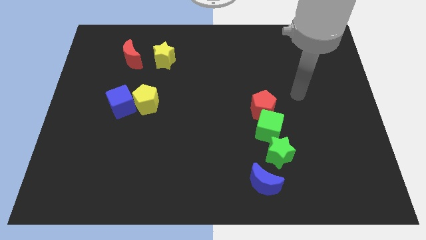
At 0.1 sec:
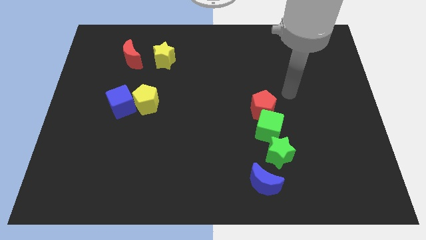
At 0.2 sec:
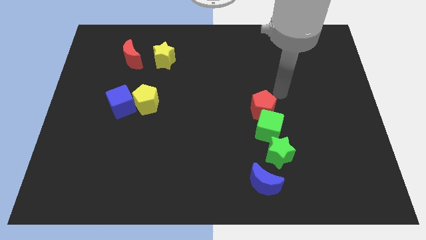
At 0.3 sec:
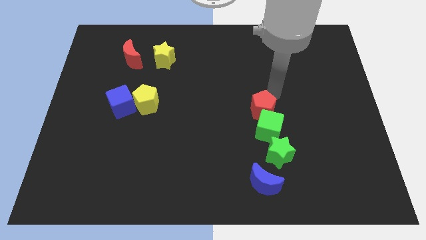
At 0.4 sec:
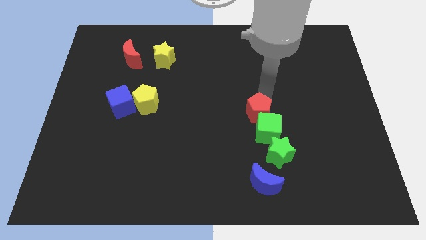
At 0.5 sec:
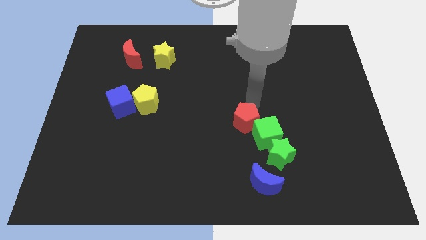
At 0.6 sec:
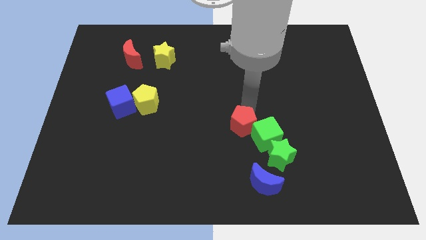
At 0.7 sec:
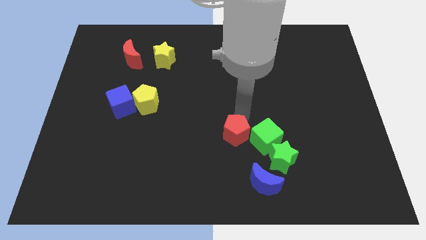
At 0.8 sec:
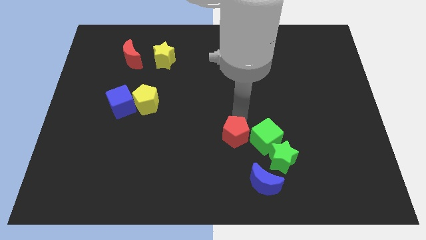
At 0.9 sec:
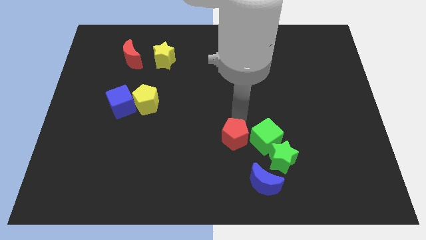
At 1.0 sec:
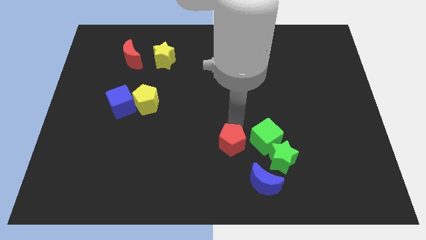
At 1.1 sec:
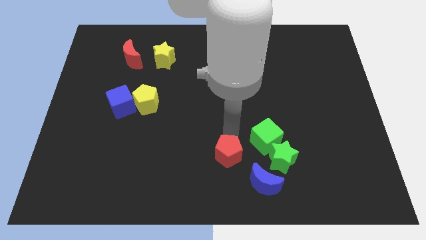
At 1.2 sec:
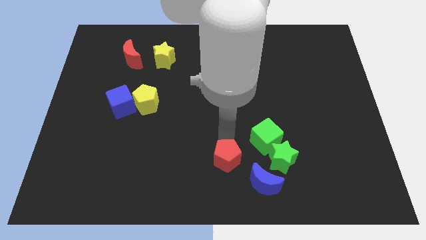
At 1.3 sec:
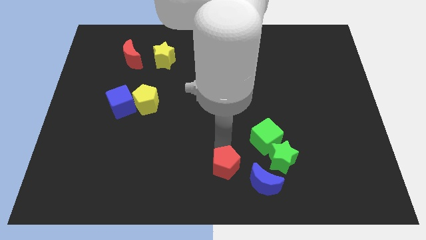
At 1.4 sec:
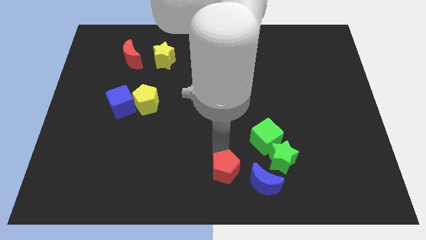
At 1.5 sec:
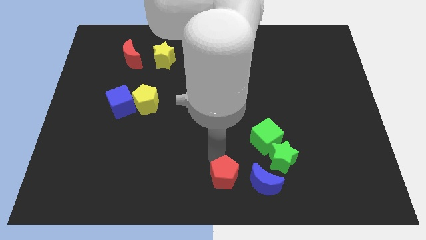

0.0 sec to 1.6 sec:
move the red pentagon left to the blue moon

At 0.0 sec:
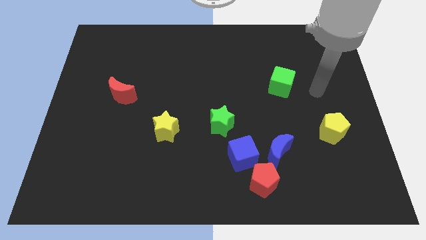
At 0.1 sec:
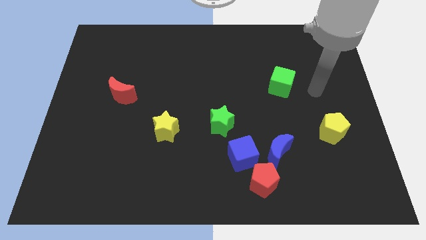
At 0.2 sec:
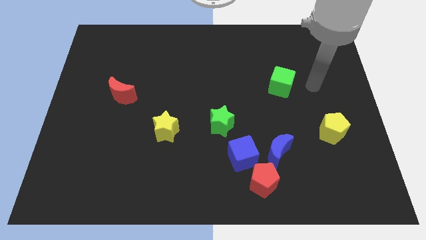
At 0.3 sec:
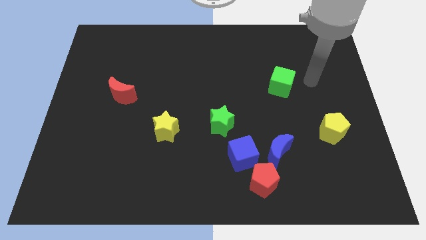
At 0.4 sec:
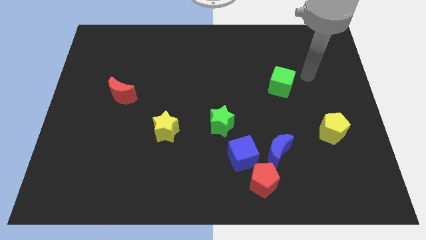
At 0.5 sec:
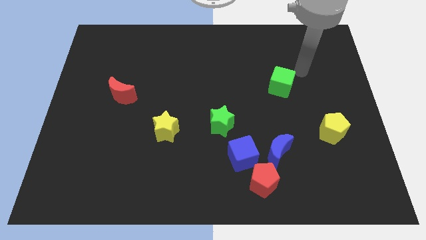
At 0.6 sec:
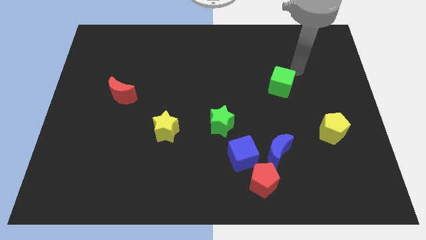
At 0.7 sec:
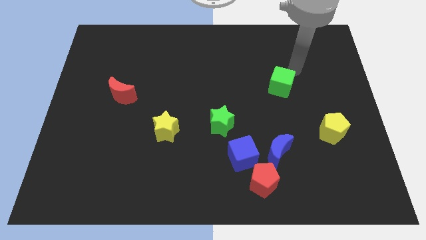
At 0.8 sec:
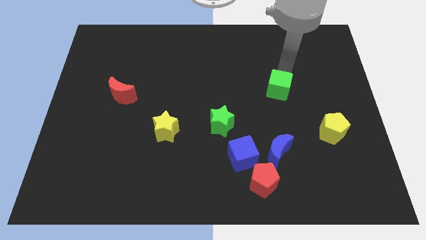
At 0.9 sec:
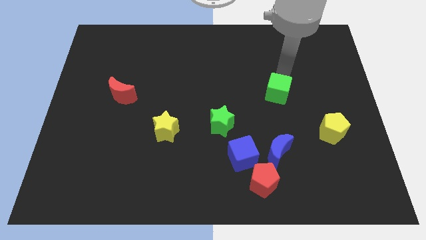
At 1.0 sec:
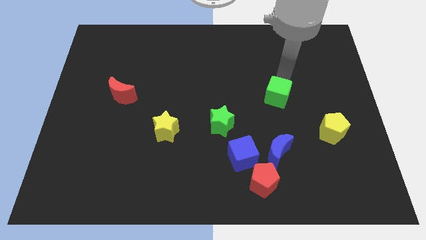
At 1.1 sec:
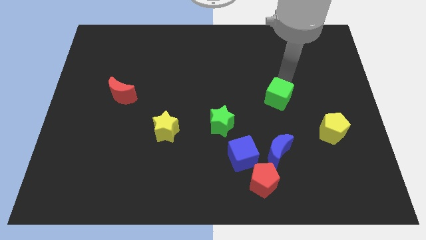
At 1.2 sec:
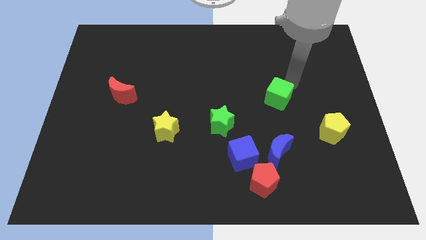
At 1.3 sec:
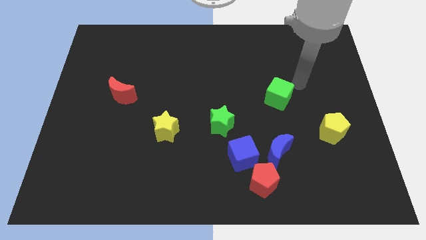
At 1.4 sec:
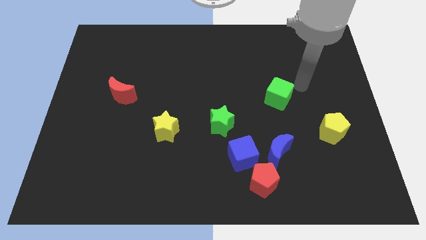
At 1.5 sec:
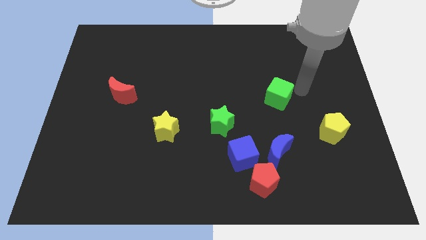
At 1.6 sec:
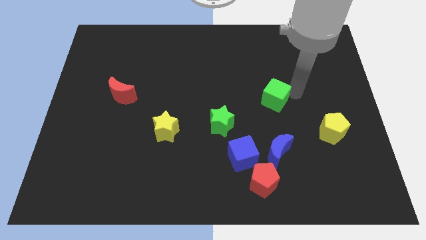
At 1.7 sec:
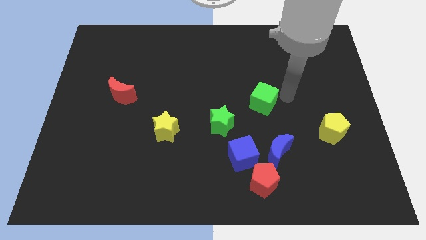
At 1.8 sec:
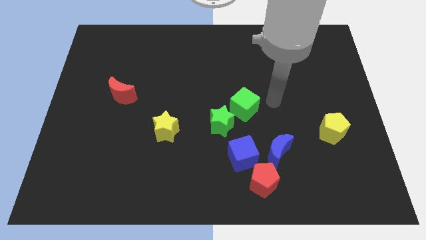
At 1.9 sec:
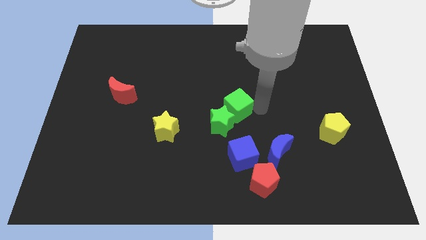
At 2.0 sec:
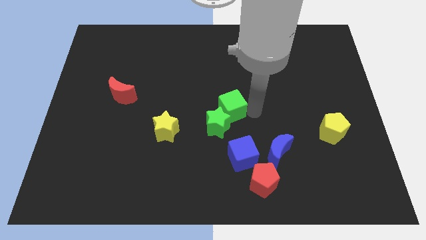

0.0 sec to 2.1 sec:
push the green cube into the green star

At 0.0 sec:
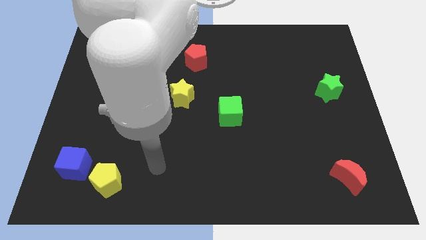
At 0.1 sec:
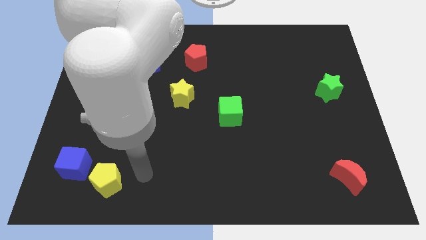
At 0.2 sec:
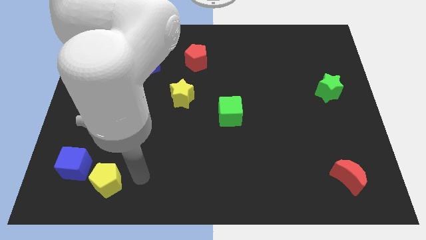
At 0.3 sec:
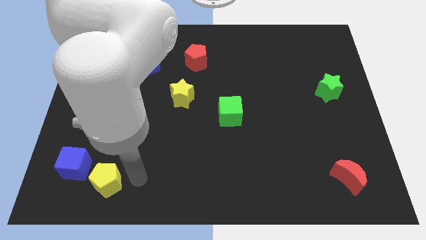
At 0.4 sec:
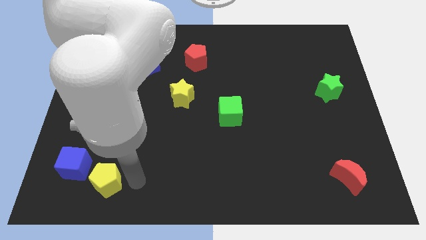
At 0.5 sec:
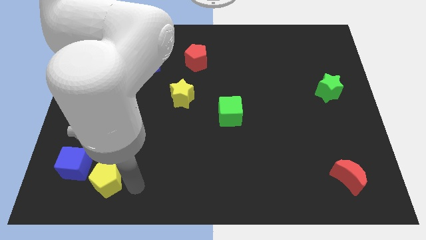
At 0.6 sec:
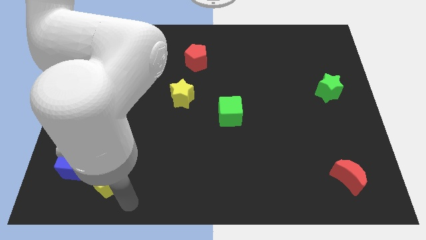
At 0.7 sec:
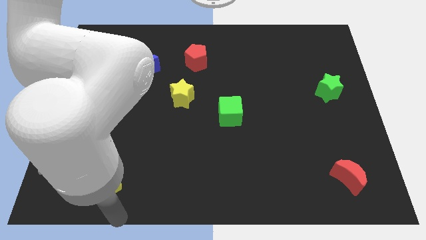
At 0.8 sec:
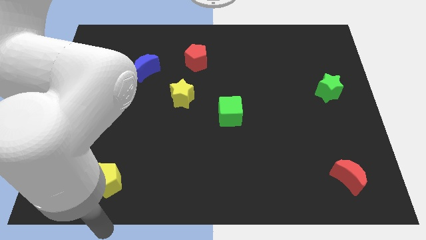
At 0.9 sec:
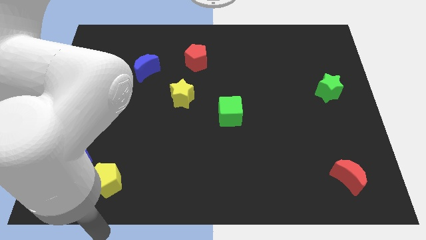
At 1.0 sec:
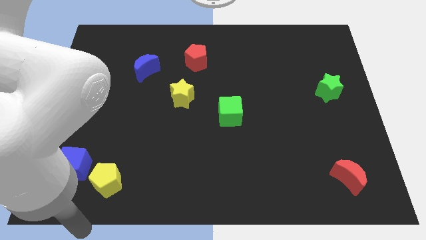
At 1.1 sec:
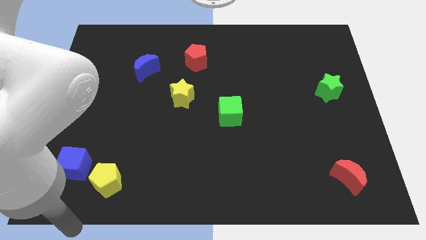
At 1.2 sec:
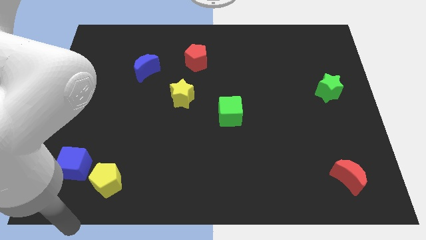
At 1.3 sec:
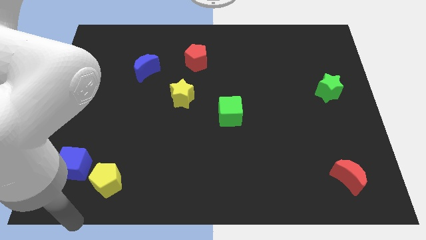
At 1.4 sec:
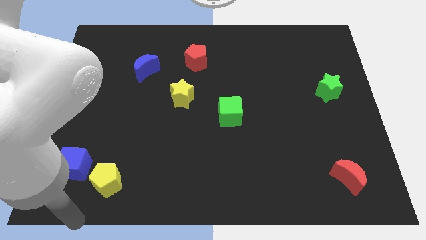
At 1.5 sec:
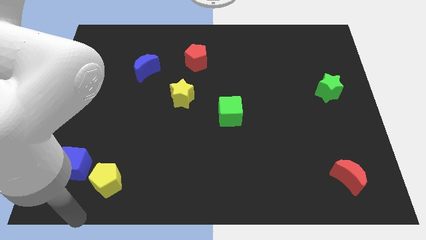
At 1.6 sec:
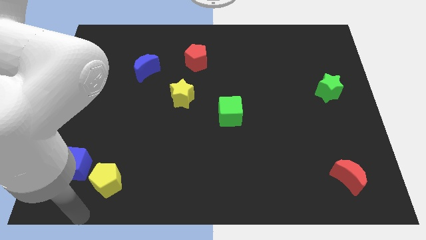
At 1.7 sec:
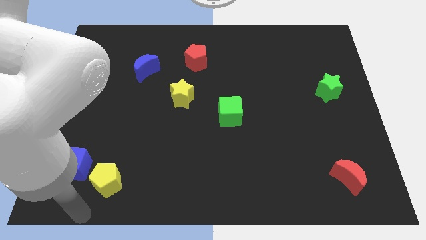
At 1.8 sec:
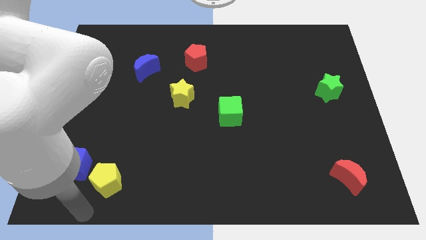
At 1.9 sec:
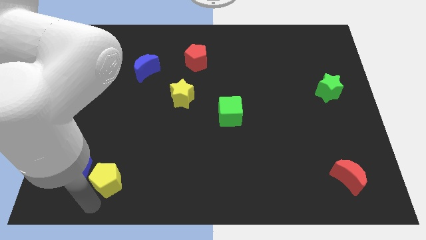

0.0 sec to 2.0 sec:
point your arm at the bottom of yellow pentagon

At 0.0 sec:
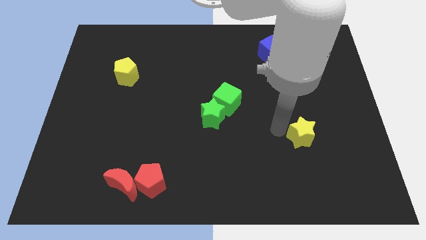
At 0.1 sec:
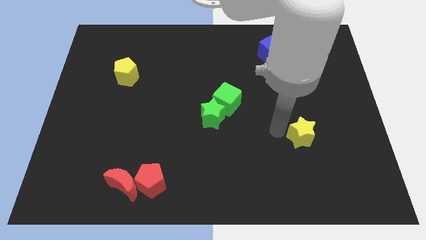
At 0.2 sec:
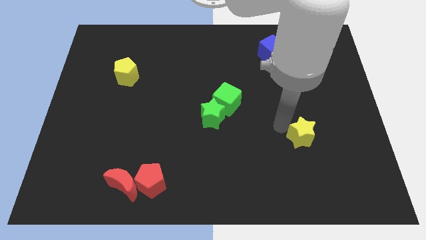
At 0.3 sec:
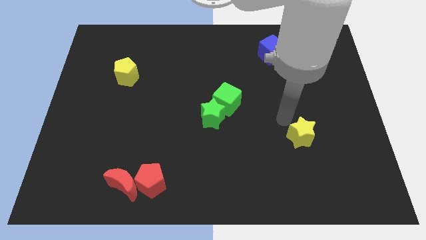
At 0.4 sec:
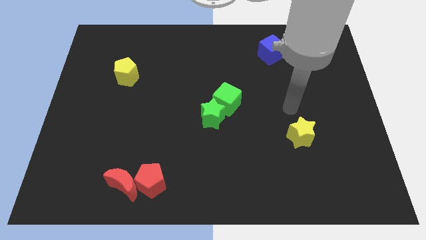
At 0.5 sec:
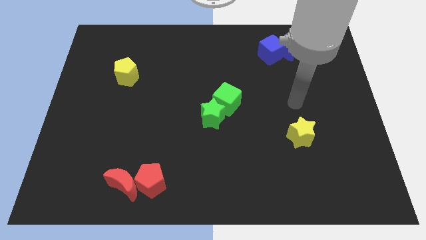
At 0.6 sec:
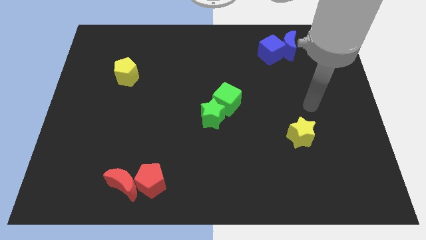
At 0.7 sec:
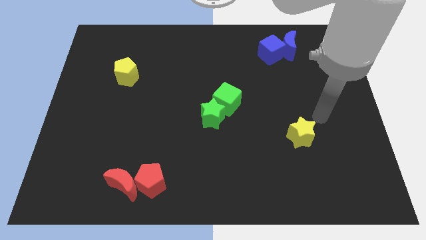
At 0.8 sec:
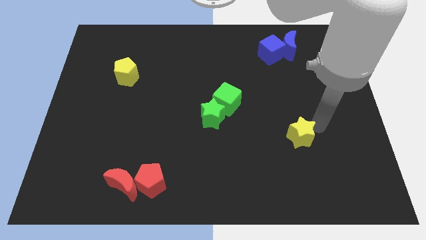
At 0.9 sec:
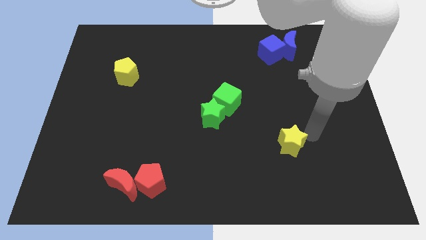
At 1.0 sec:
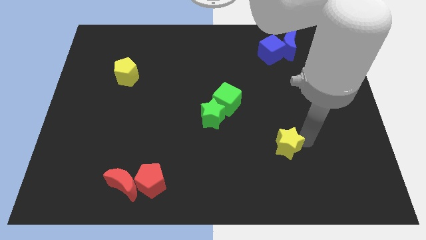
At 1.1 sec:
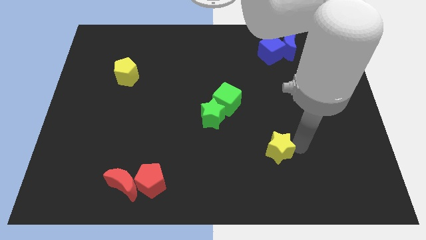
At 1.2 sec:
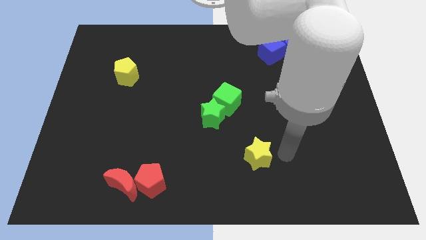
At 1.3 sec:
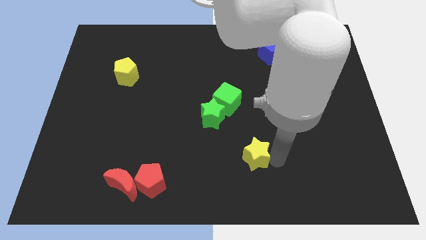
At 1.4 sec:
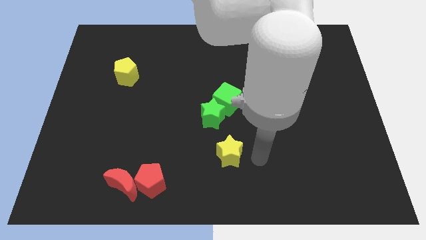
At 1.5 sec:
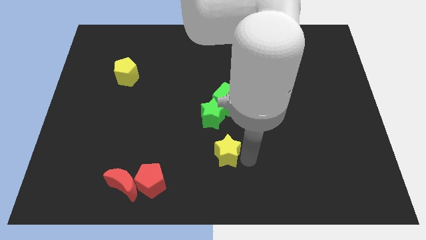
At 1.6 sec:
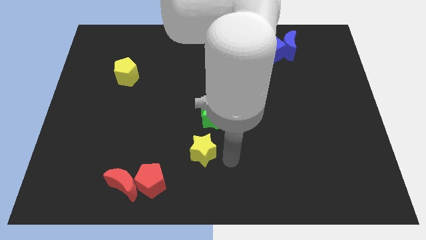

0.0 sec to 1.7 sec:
push the yellow star to the bottom of the green star

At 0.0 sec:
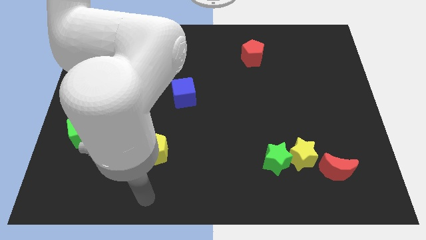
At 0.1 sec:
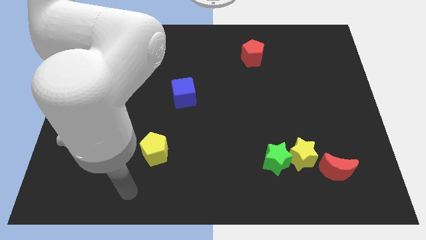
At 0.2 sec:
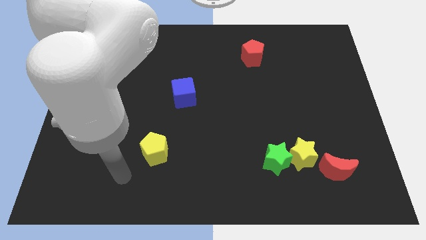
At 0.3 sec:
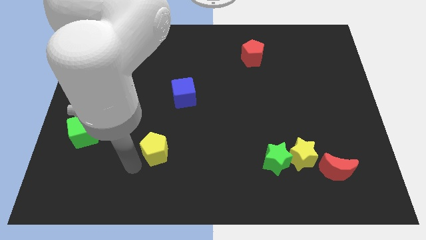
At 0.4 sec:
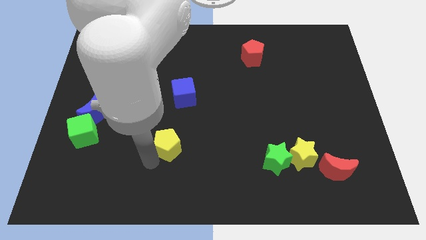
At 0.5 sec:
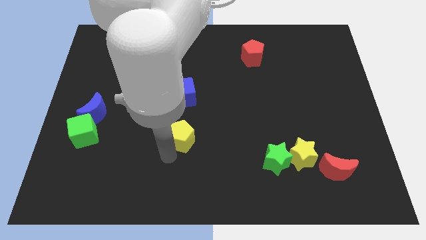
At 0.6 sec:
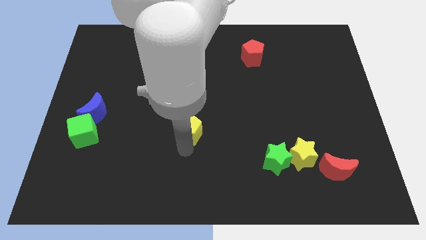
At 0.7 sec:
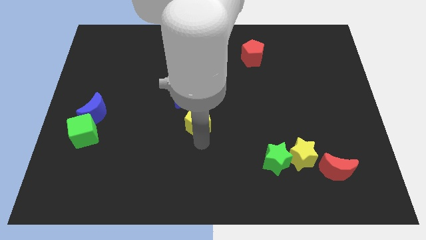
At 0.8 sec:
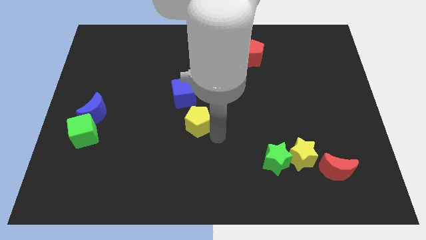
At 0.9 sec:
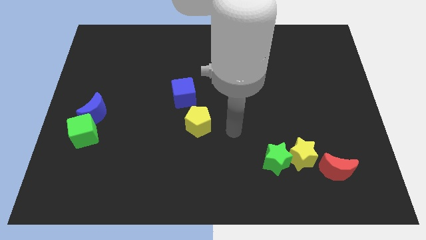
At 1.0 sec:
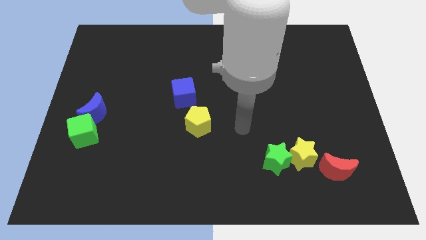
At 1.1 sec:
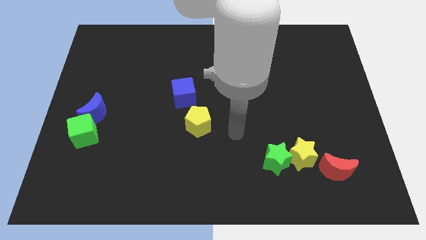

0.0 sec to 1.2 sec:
slide the yellow pentagon diagonally bottom right to the blue cube

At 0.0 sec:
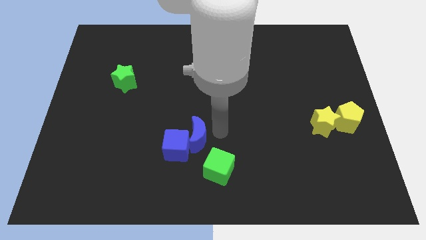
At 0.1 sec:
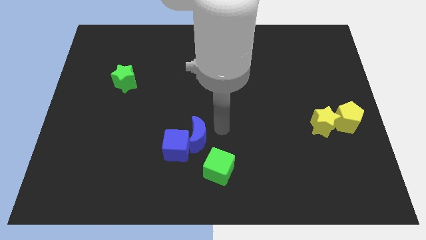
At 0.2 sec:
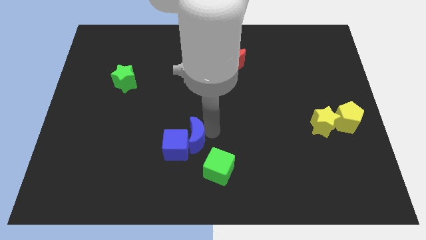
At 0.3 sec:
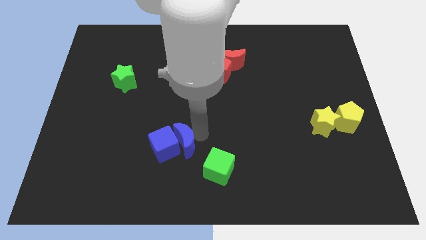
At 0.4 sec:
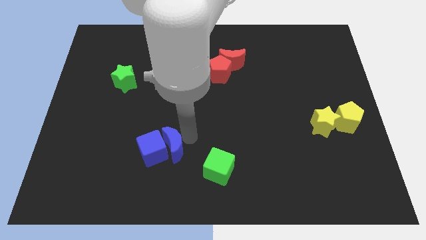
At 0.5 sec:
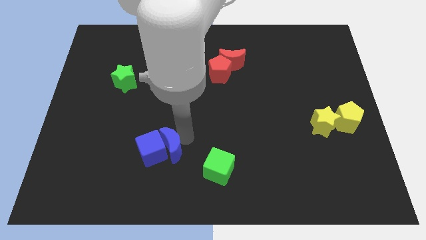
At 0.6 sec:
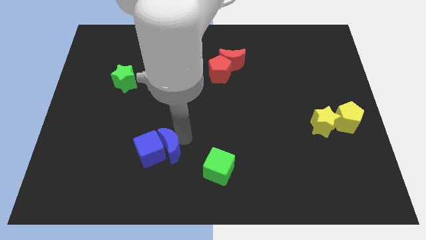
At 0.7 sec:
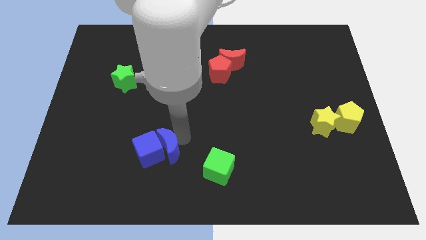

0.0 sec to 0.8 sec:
move the blue crescent along with the blue square slightly towards the left center of the board
